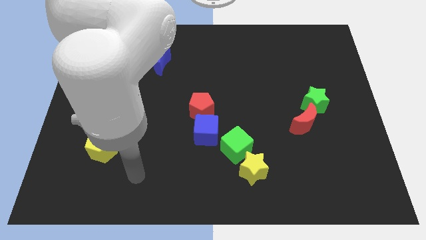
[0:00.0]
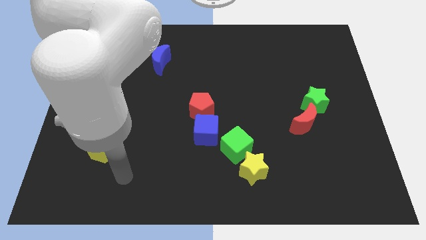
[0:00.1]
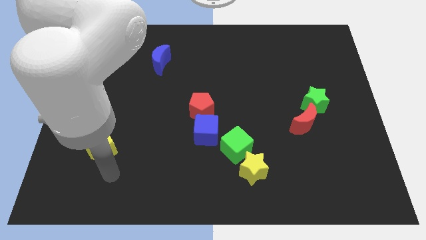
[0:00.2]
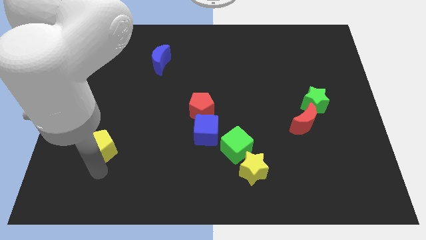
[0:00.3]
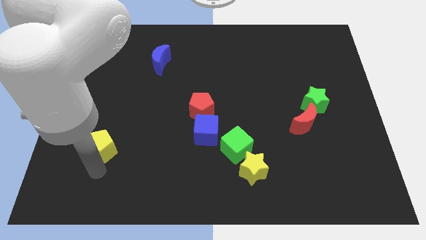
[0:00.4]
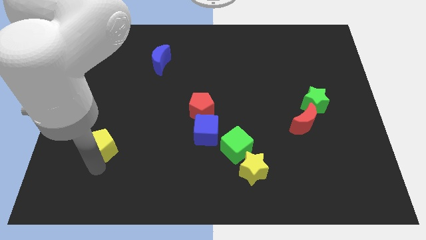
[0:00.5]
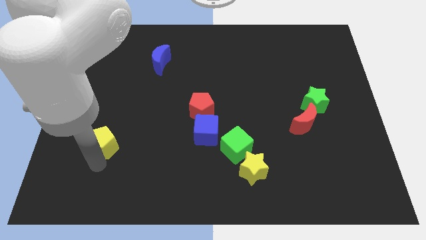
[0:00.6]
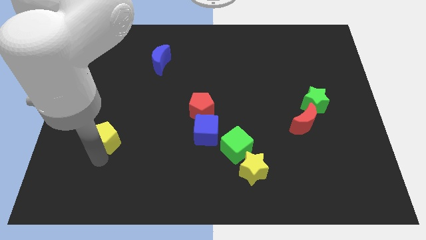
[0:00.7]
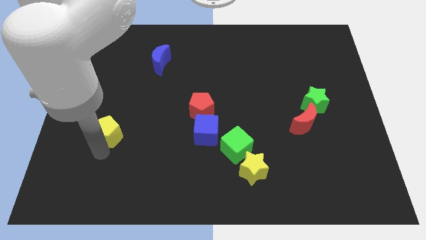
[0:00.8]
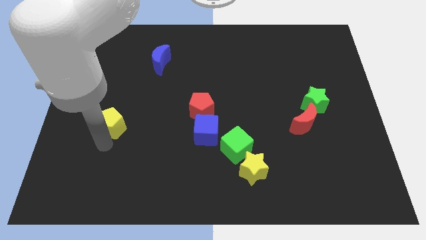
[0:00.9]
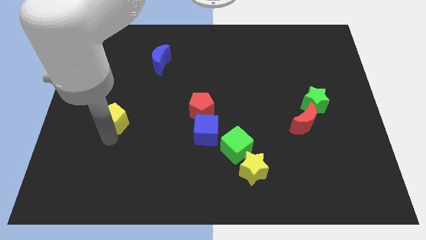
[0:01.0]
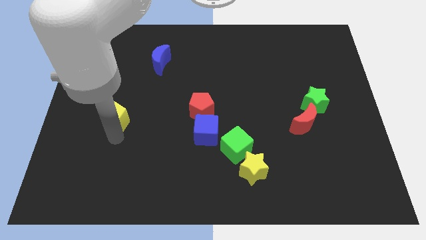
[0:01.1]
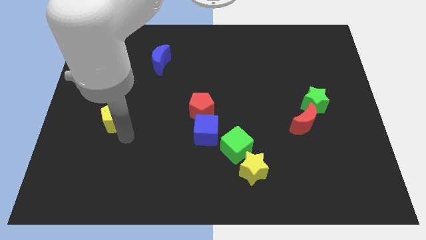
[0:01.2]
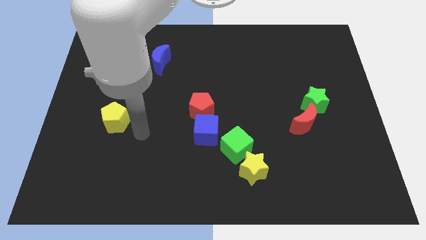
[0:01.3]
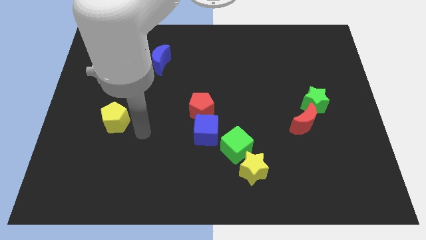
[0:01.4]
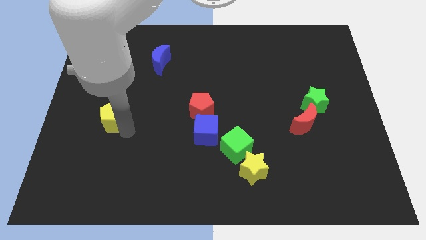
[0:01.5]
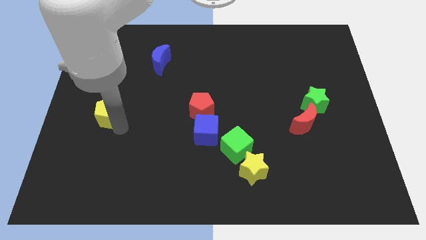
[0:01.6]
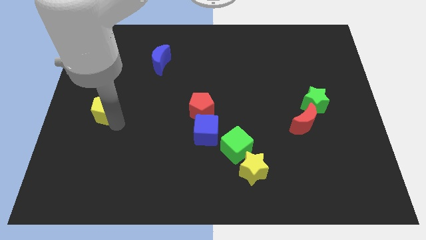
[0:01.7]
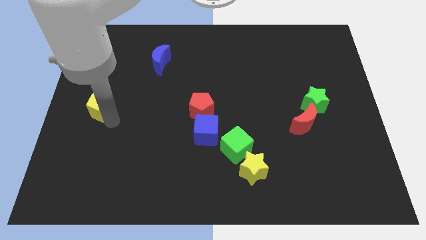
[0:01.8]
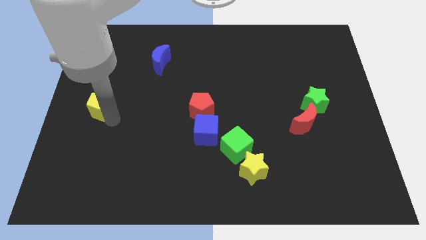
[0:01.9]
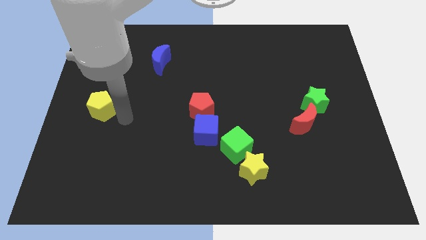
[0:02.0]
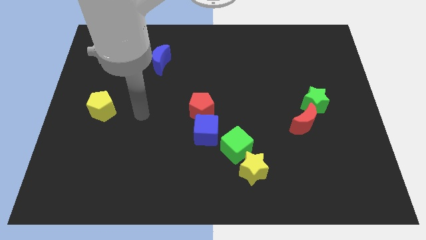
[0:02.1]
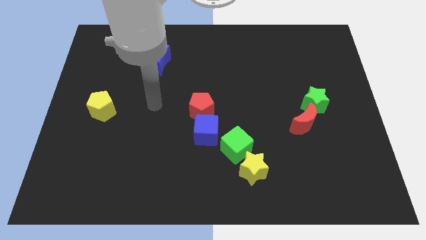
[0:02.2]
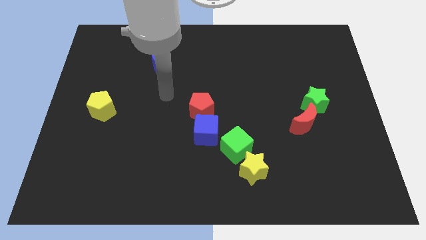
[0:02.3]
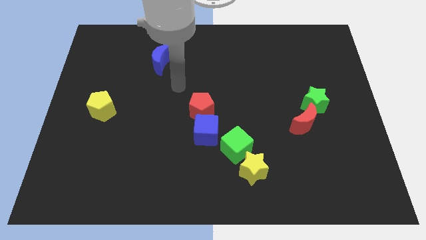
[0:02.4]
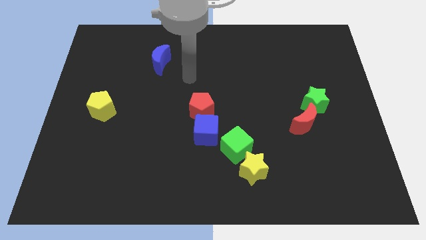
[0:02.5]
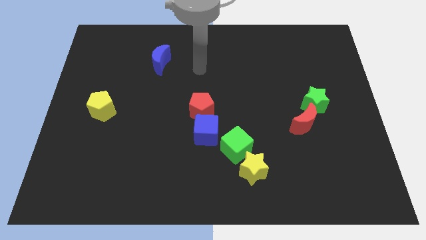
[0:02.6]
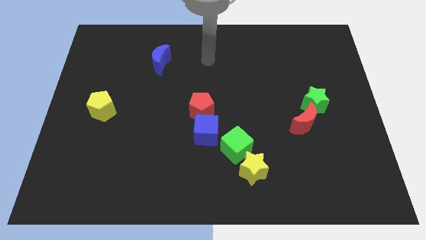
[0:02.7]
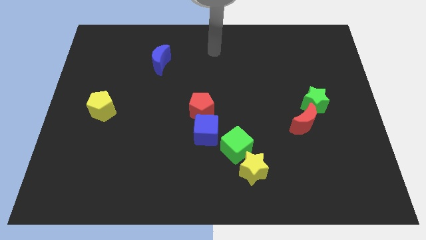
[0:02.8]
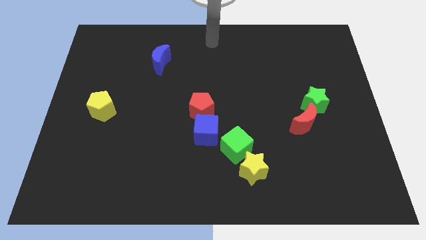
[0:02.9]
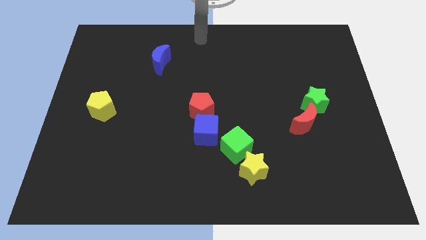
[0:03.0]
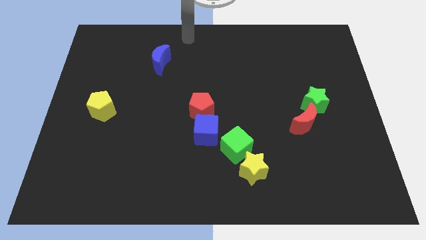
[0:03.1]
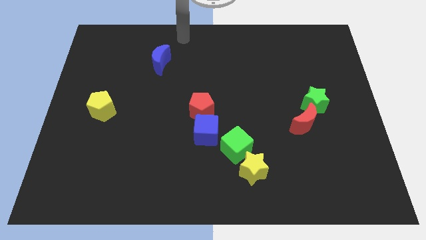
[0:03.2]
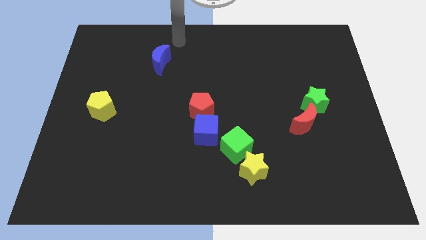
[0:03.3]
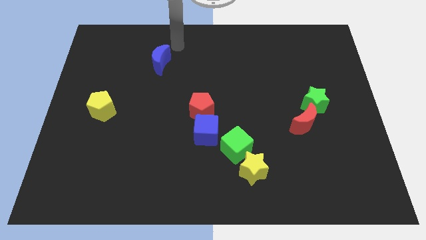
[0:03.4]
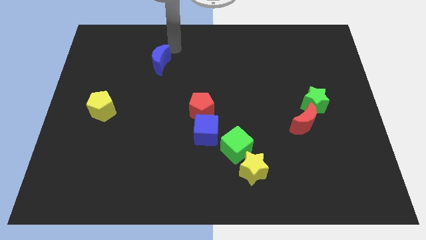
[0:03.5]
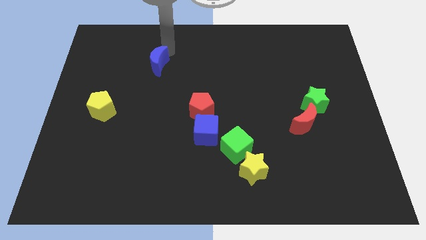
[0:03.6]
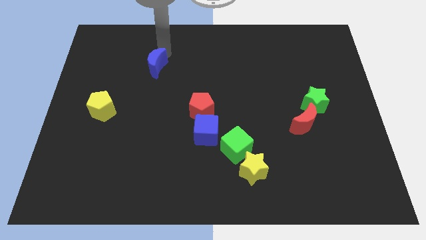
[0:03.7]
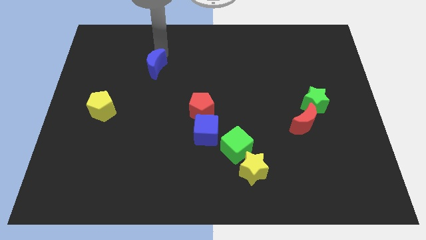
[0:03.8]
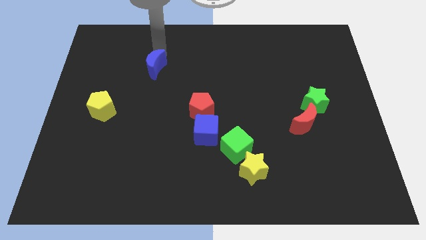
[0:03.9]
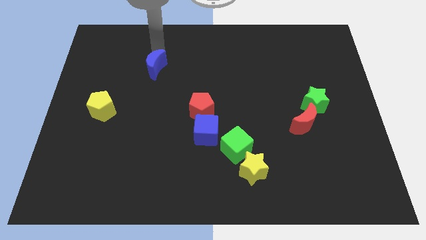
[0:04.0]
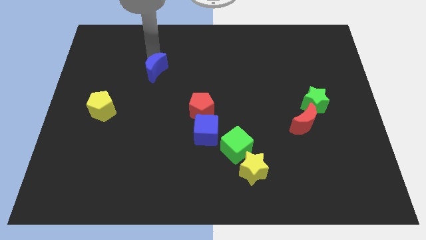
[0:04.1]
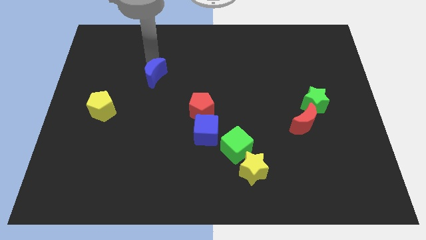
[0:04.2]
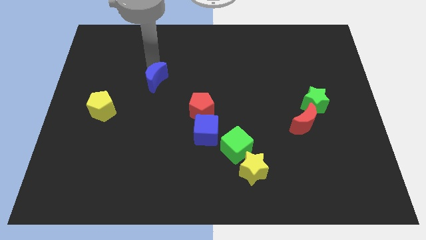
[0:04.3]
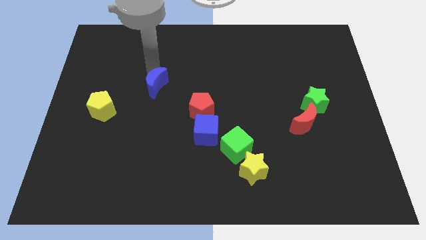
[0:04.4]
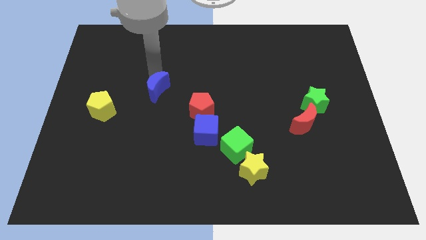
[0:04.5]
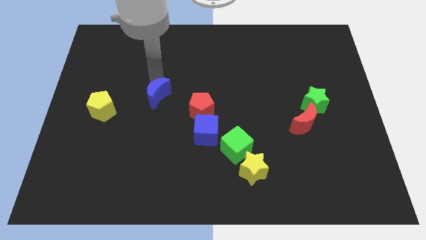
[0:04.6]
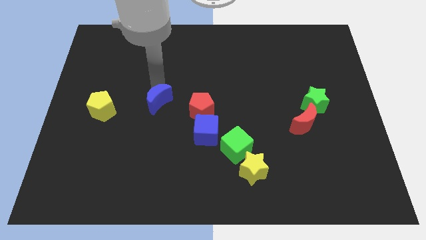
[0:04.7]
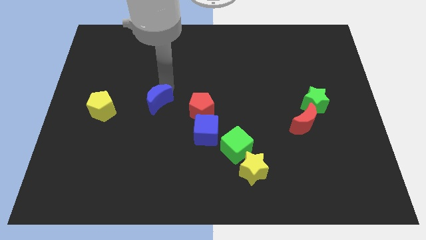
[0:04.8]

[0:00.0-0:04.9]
place the blue crescent in between yellow pentagon and red pentagon

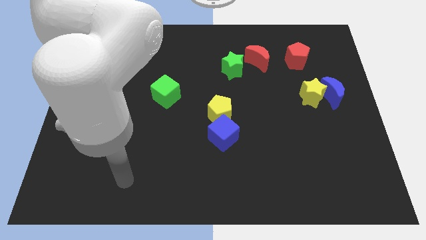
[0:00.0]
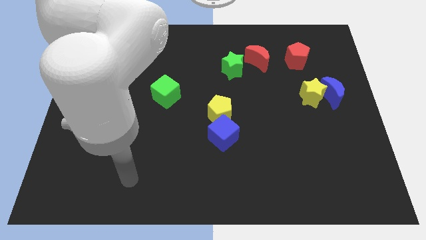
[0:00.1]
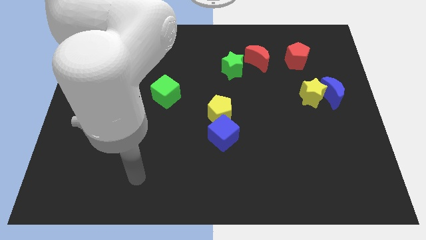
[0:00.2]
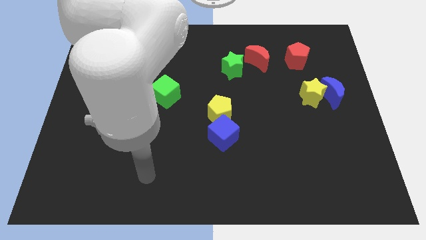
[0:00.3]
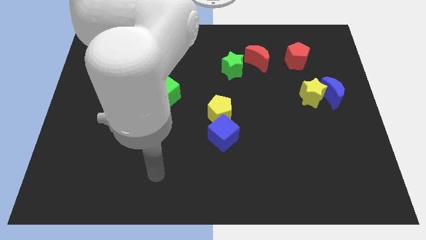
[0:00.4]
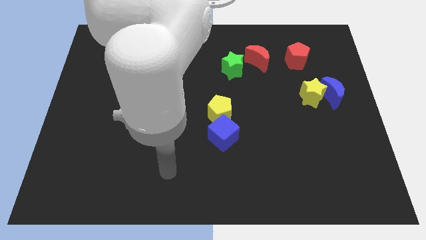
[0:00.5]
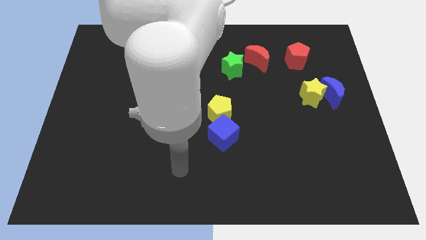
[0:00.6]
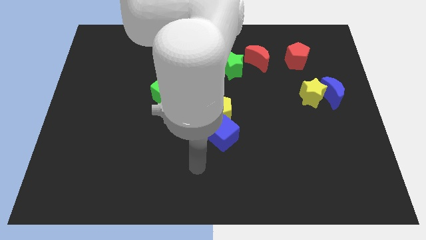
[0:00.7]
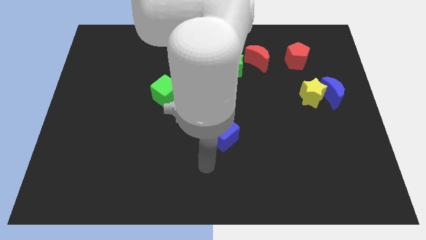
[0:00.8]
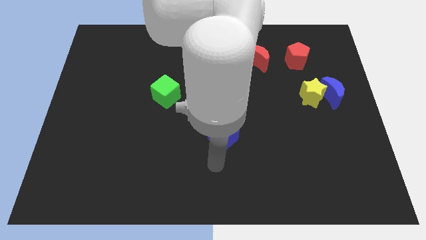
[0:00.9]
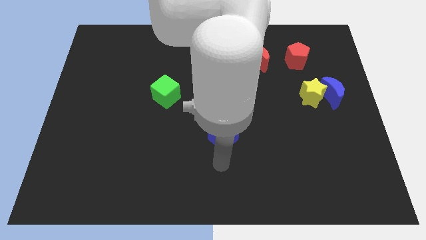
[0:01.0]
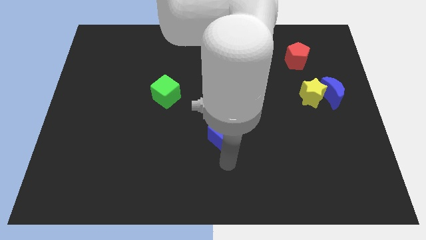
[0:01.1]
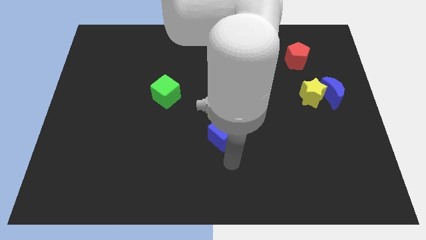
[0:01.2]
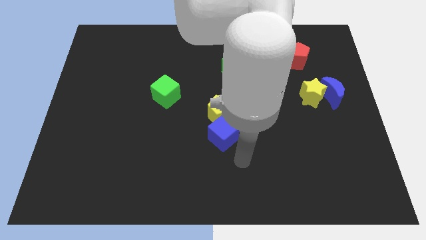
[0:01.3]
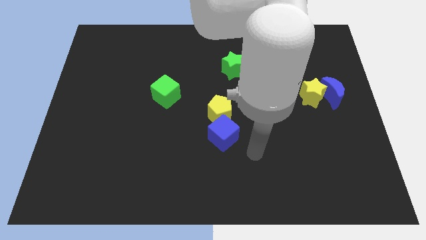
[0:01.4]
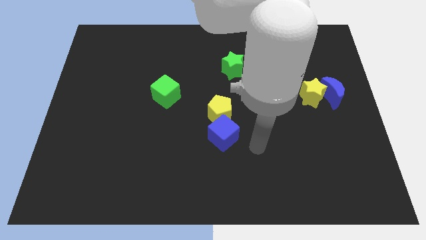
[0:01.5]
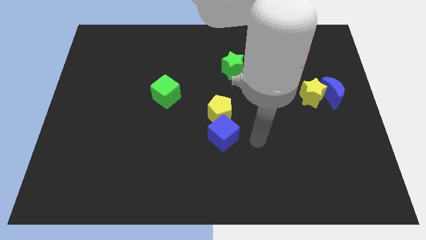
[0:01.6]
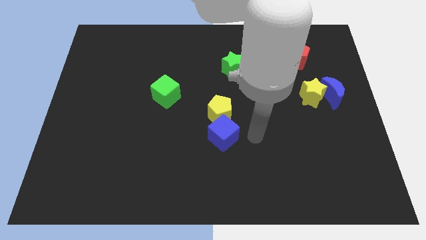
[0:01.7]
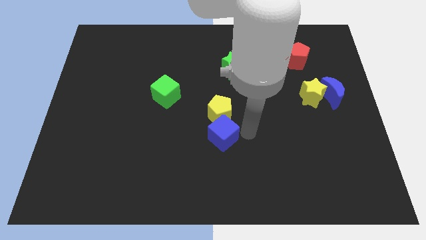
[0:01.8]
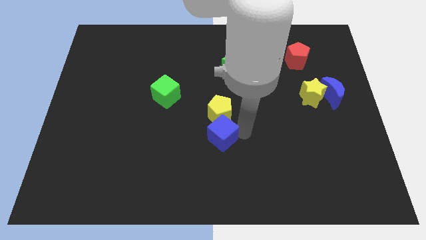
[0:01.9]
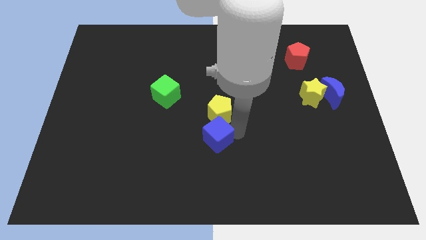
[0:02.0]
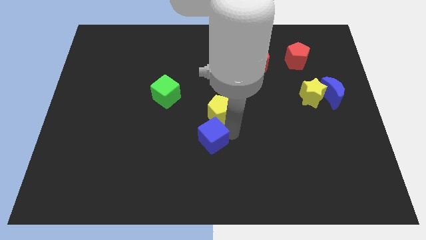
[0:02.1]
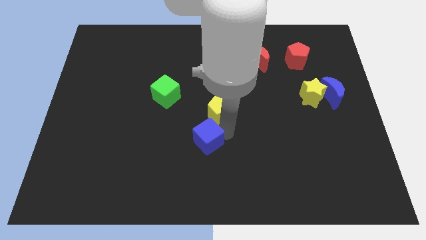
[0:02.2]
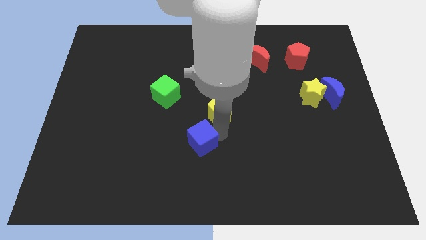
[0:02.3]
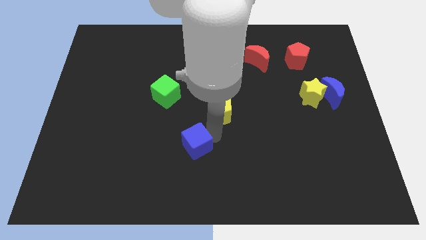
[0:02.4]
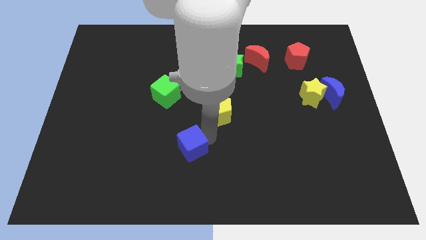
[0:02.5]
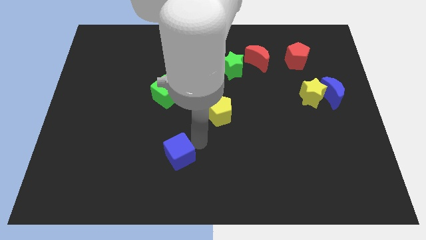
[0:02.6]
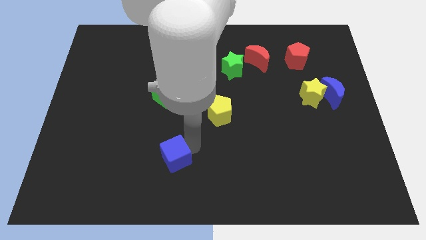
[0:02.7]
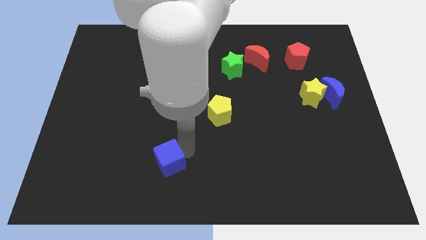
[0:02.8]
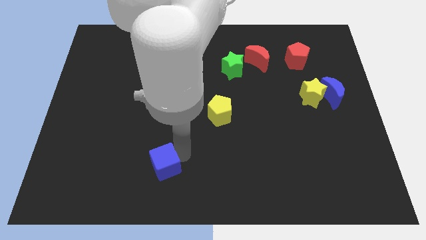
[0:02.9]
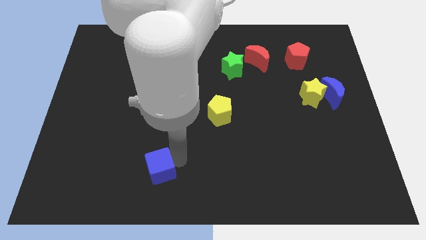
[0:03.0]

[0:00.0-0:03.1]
move blue cube towards the green cube

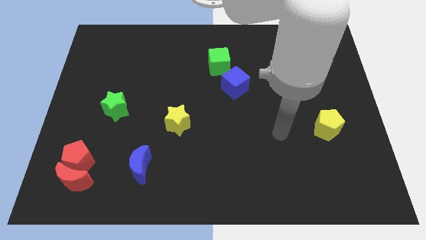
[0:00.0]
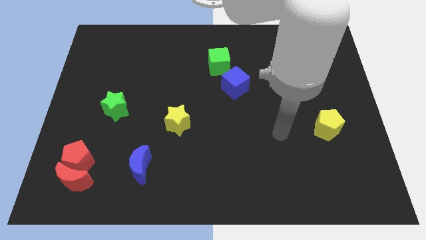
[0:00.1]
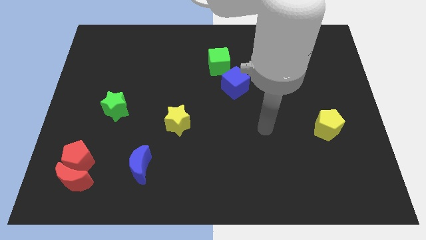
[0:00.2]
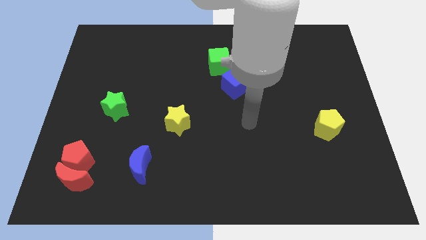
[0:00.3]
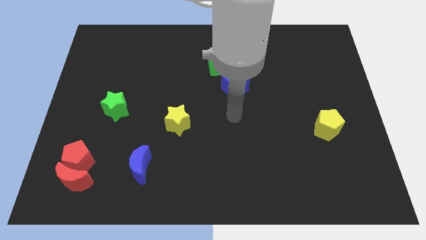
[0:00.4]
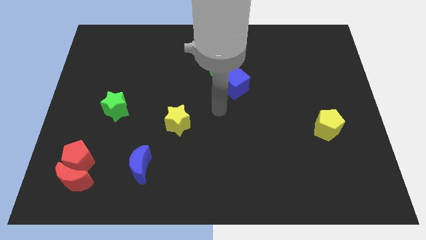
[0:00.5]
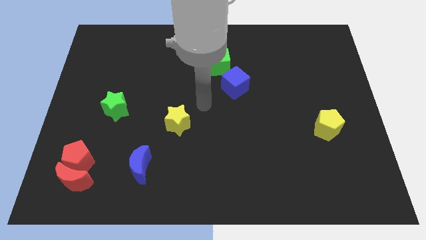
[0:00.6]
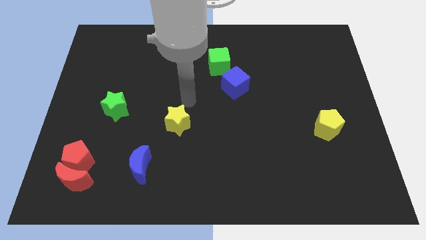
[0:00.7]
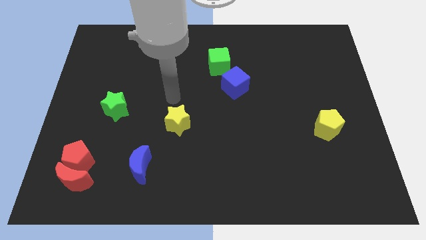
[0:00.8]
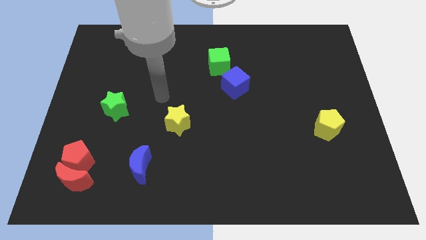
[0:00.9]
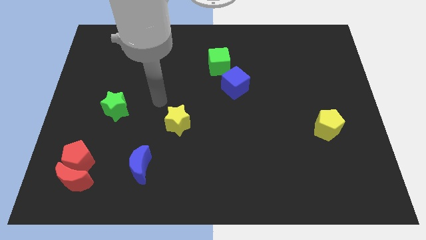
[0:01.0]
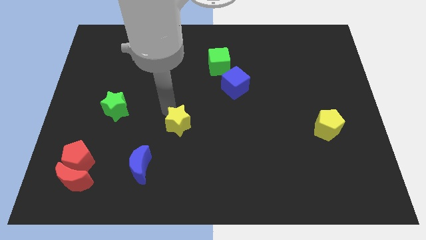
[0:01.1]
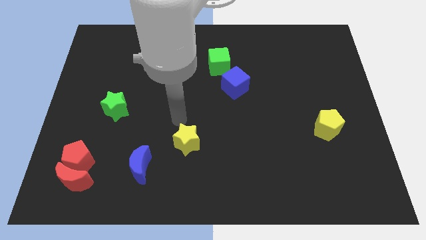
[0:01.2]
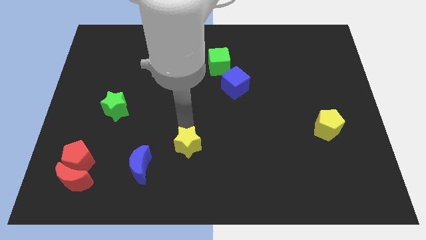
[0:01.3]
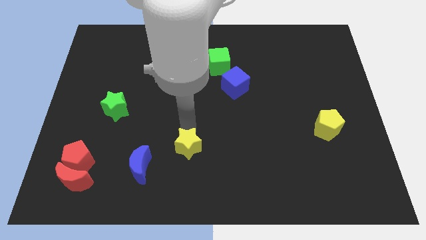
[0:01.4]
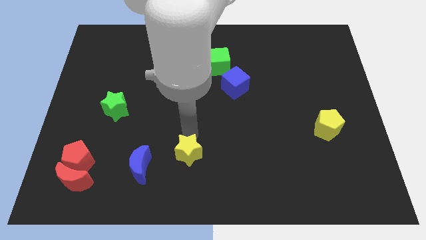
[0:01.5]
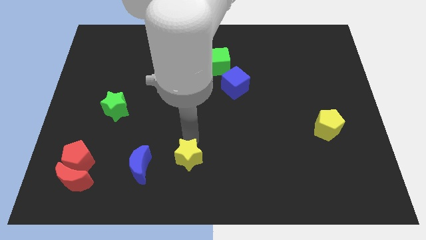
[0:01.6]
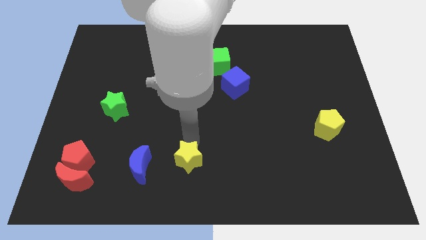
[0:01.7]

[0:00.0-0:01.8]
slide the yellow star towards the bottom of the board
